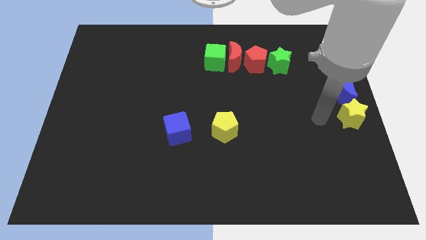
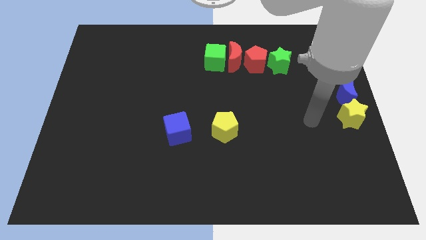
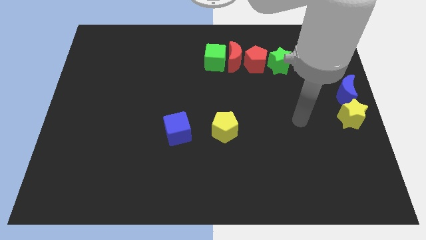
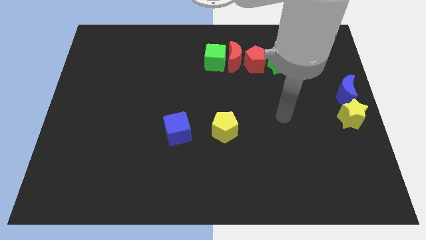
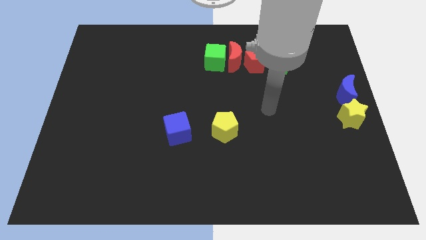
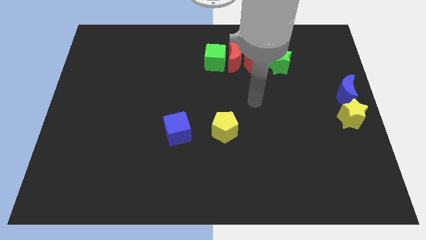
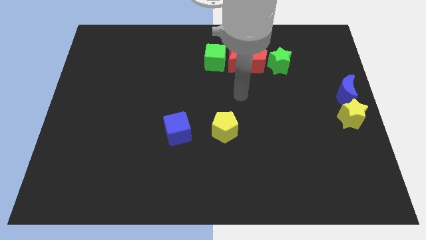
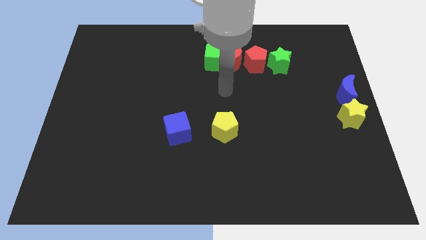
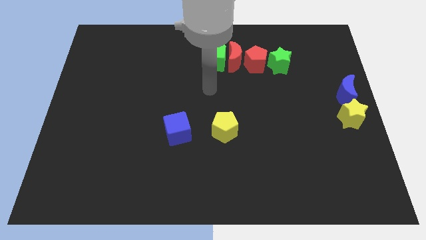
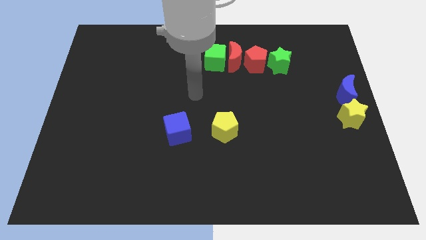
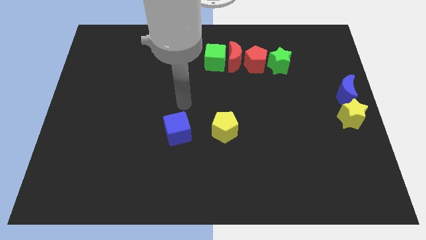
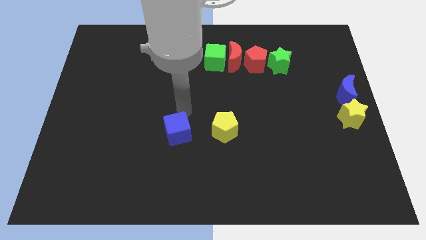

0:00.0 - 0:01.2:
move the arm to the left

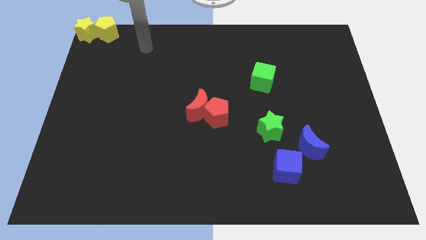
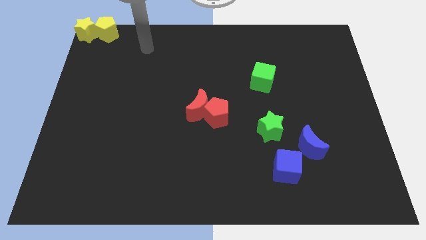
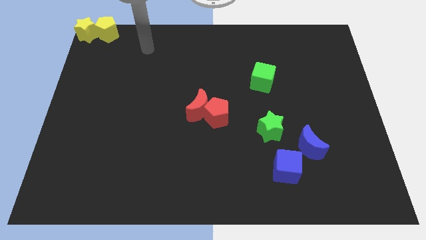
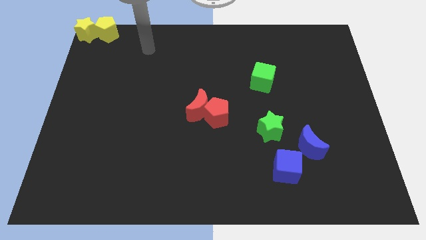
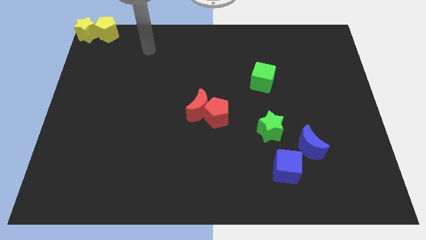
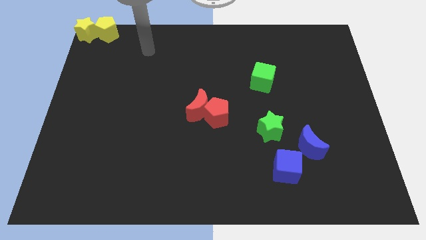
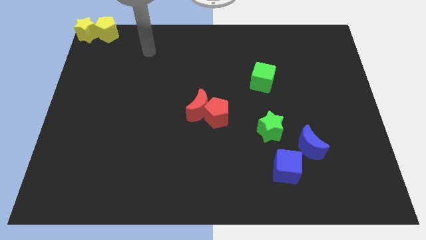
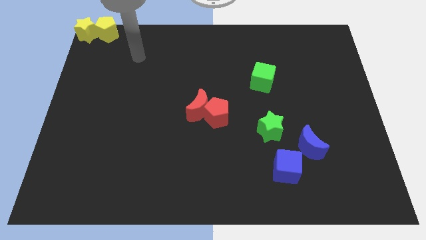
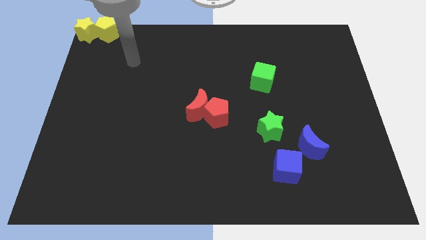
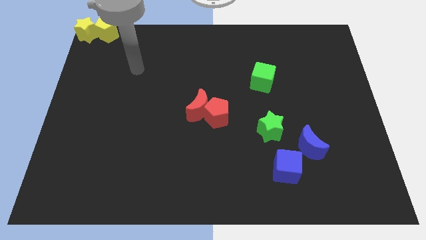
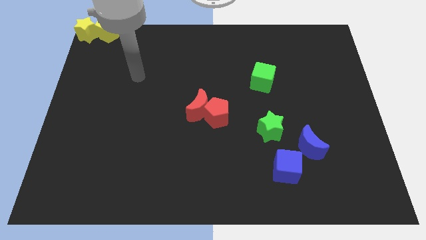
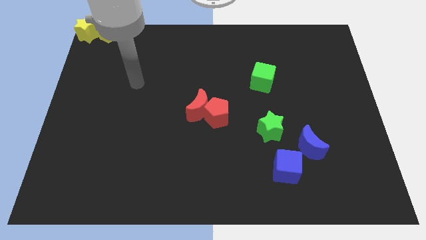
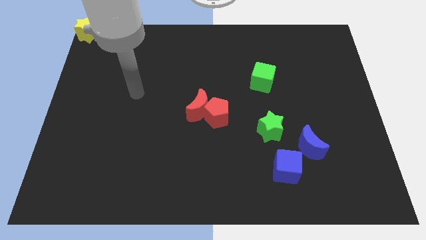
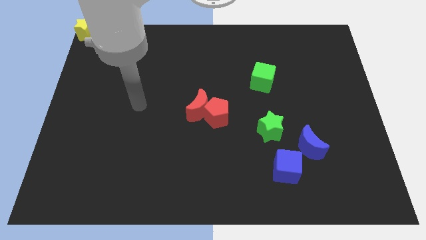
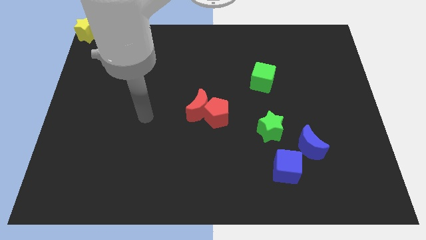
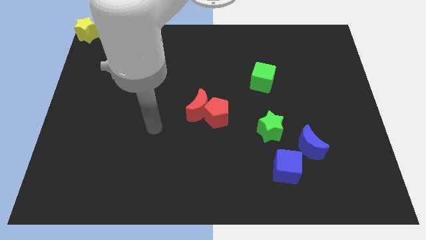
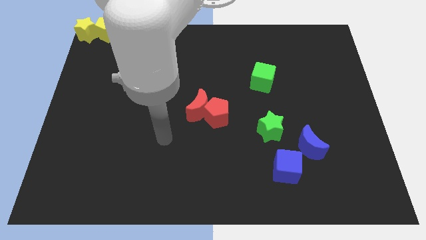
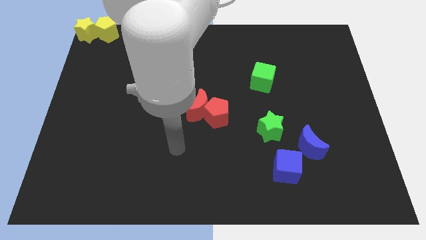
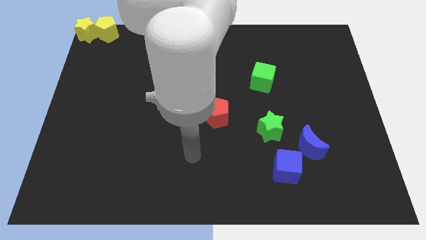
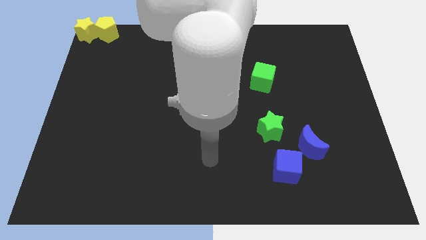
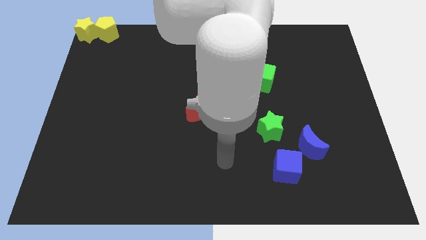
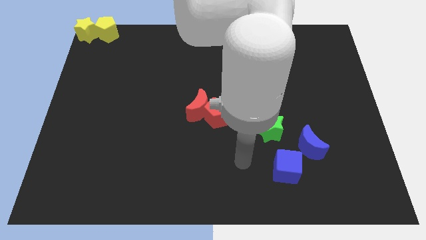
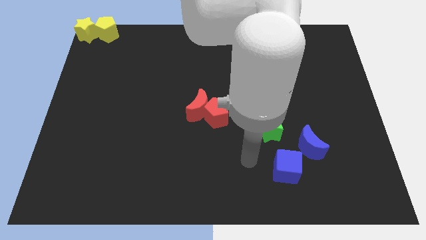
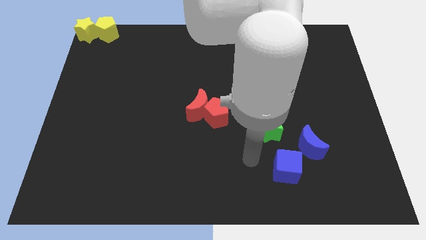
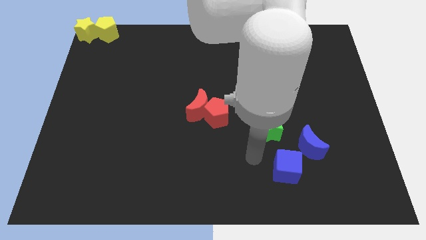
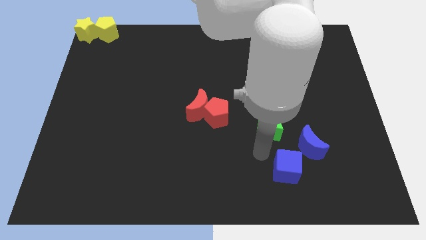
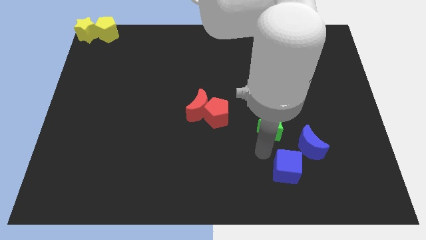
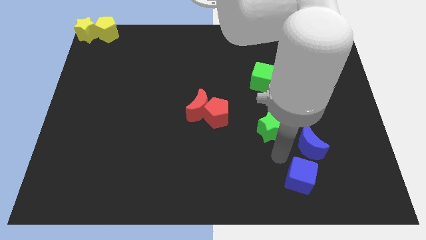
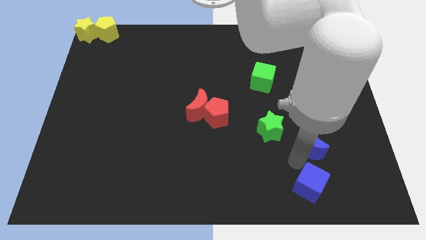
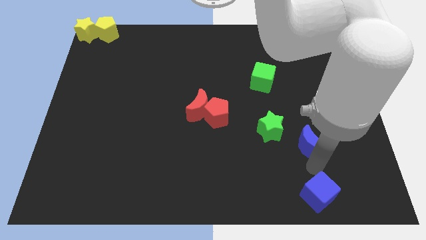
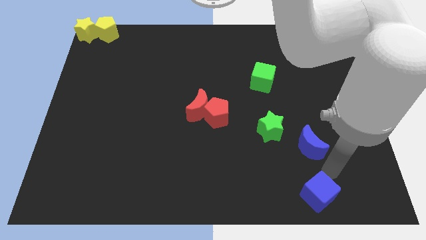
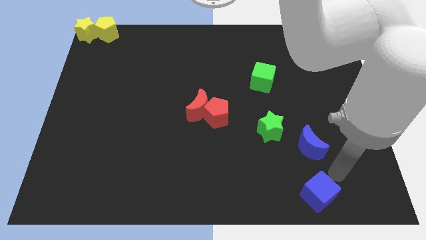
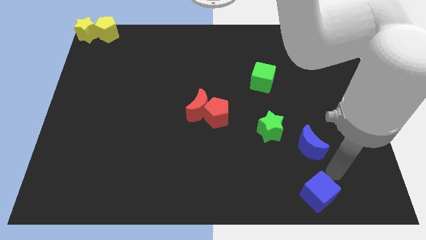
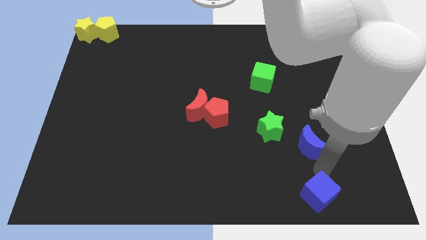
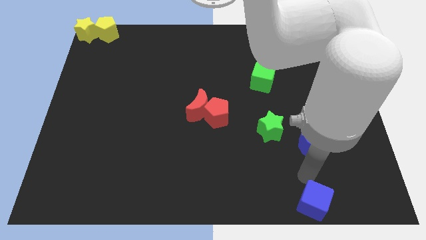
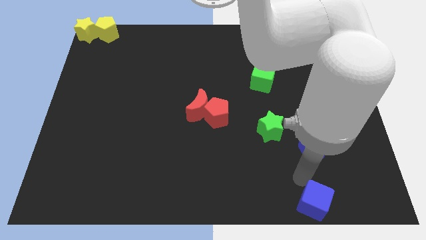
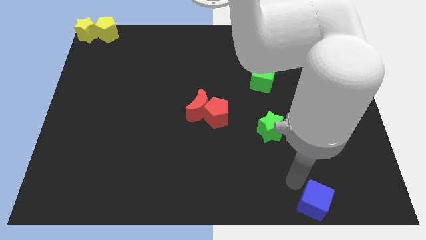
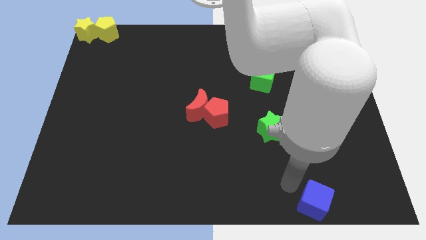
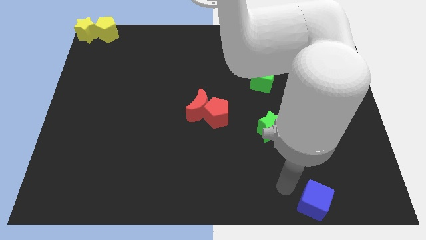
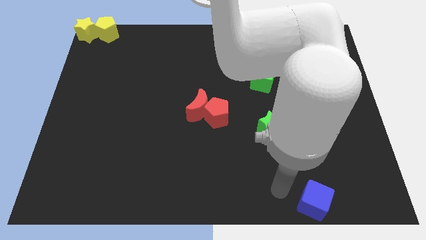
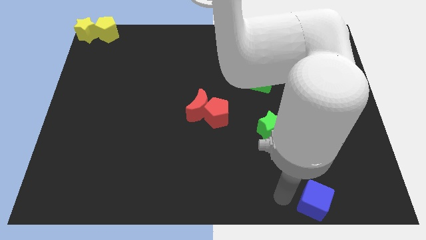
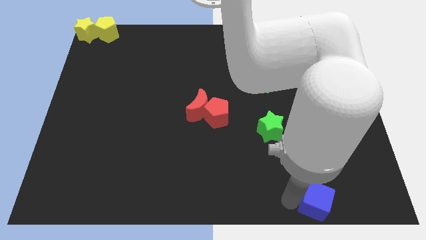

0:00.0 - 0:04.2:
move the blue cube parallel to the bottom of the blue crescent

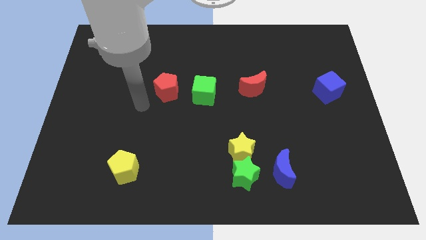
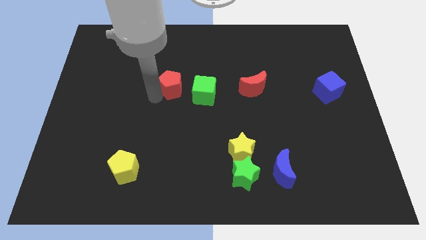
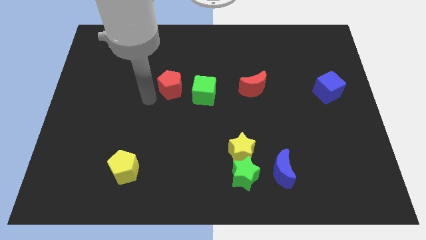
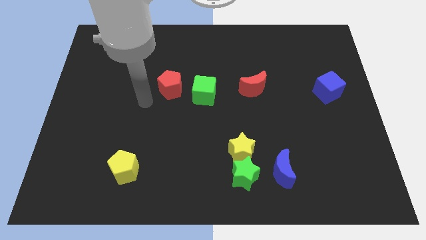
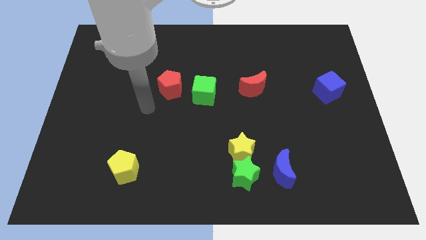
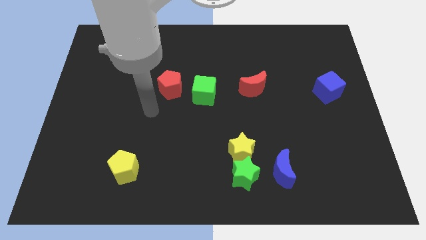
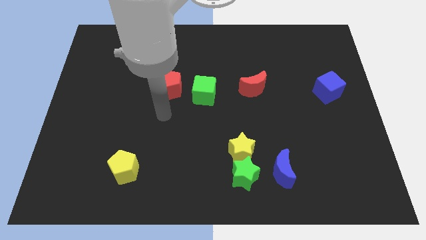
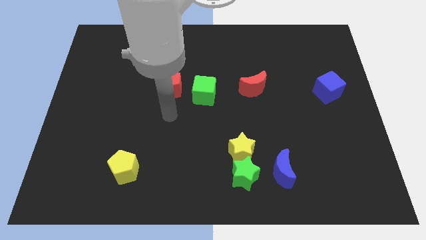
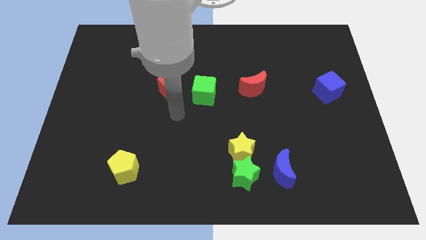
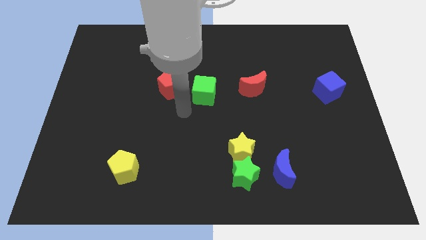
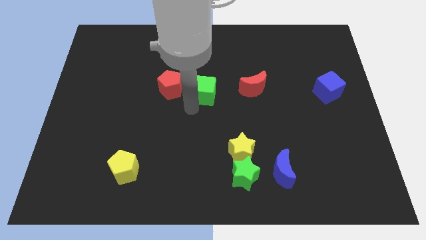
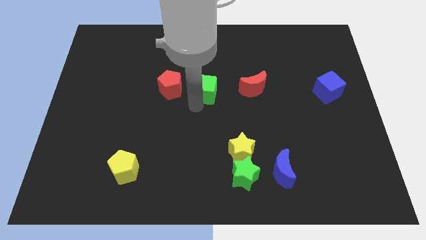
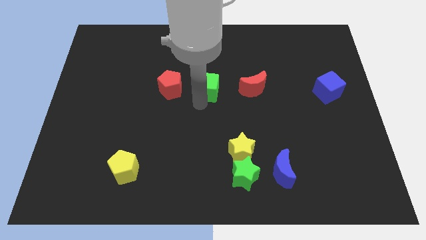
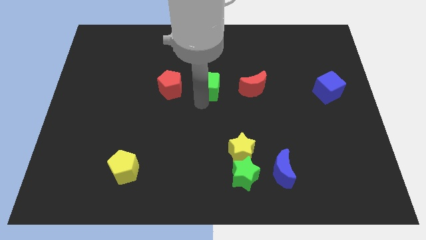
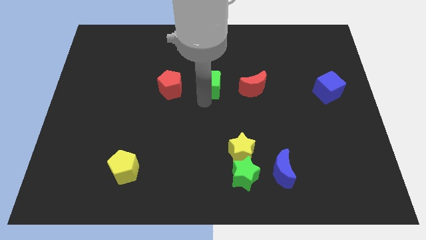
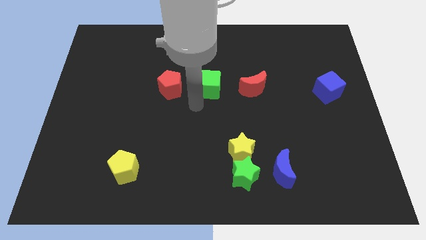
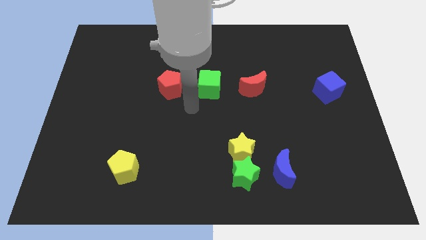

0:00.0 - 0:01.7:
move slightly green cube in between red moon and red pentagon

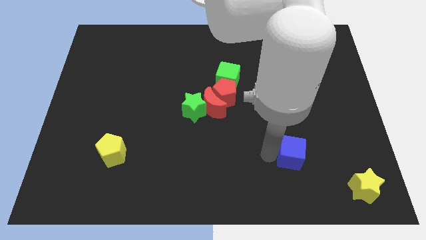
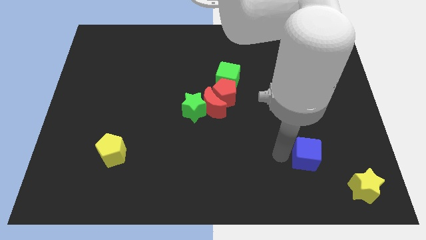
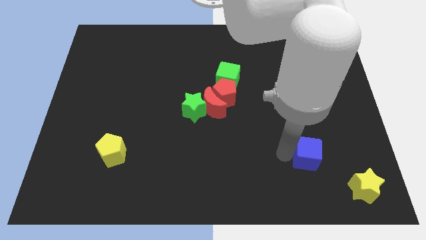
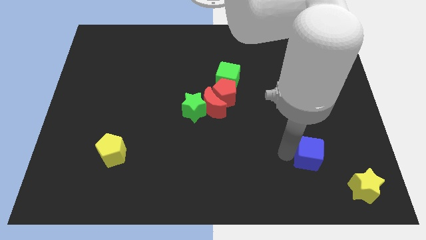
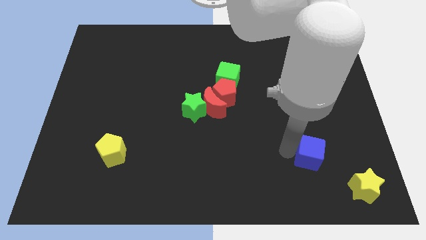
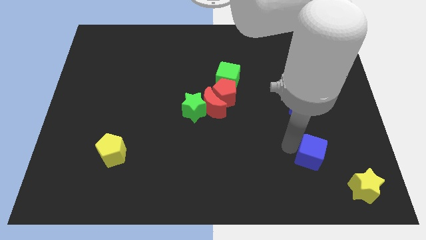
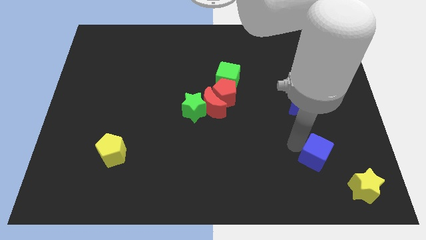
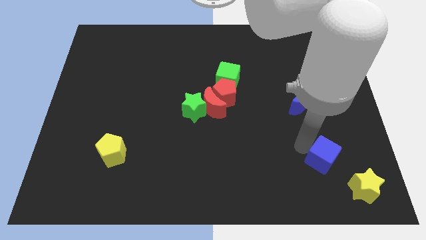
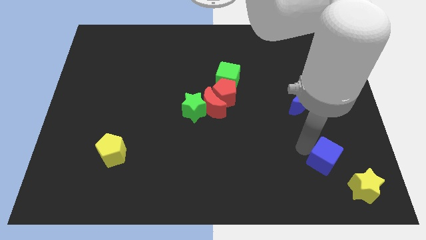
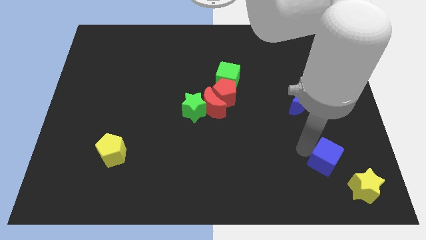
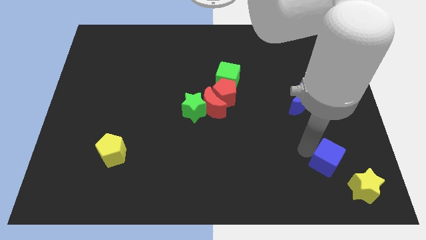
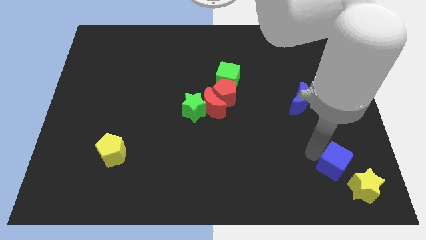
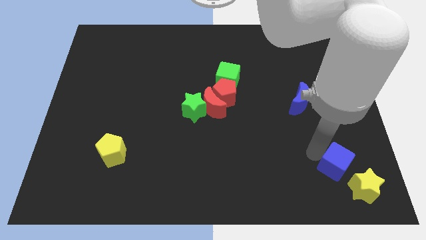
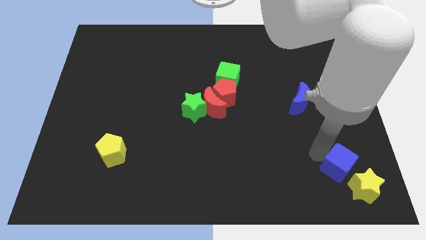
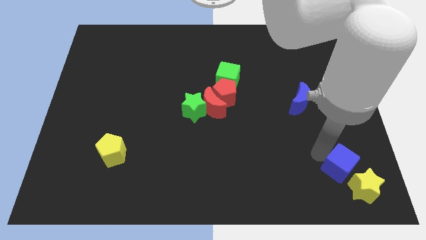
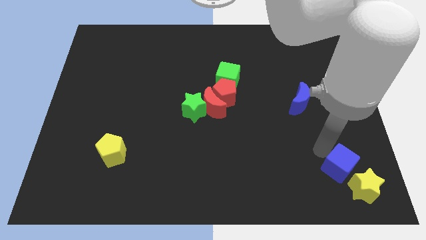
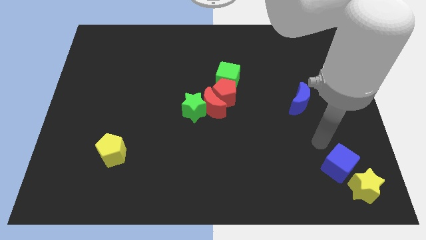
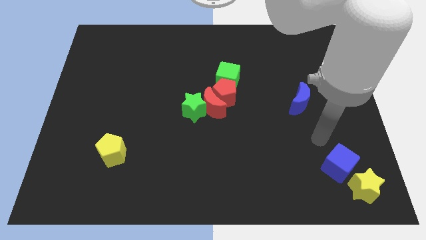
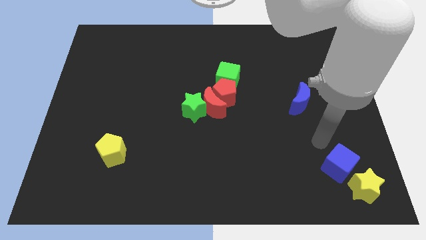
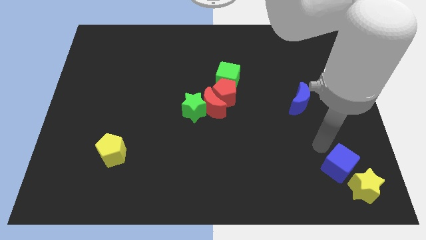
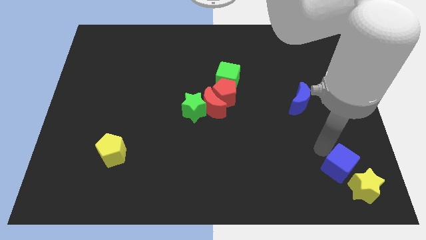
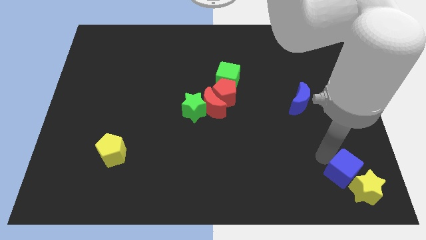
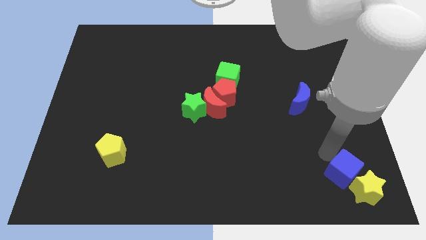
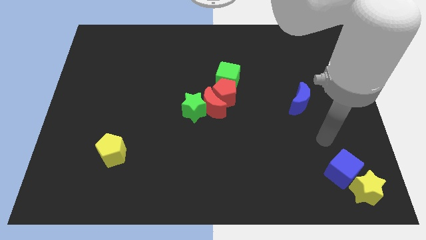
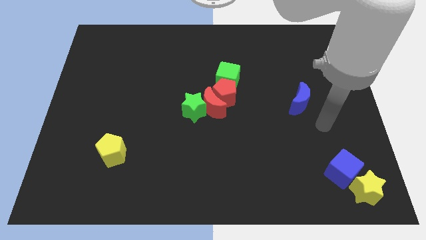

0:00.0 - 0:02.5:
place blue cube near yellow star
